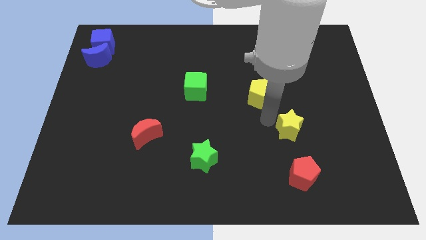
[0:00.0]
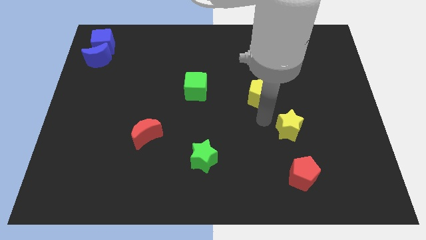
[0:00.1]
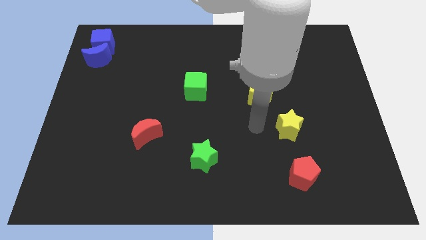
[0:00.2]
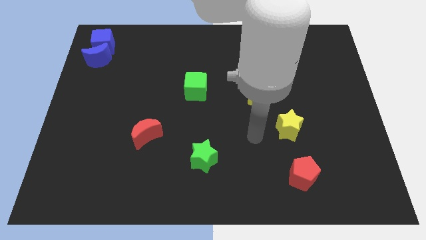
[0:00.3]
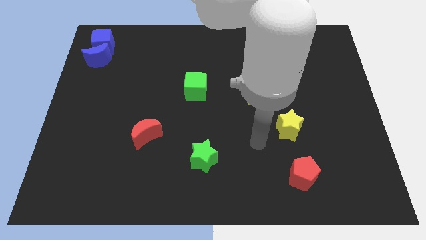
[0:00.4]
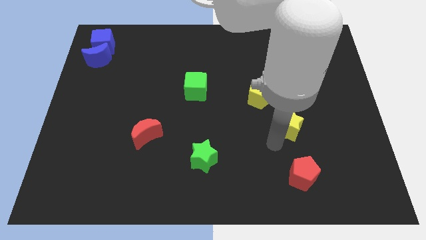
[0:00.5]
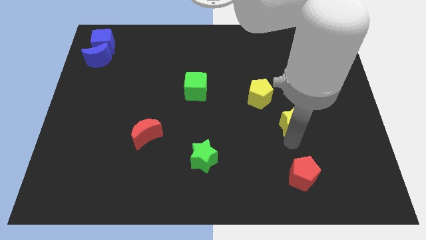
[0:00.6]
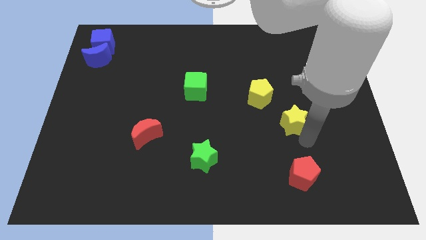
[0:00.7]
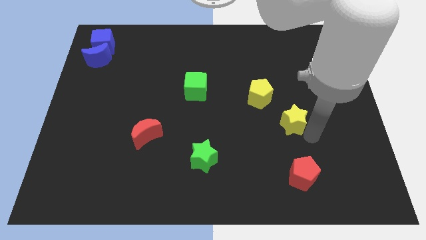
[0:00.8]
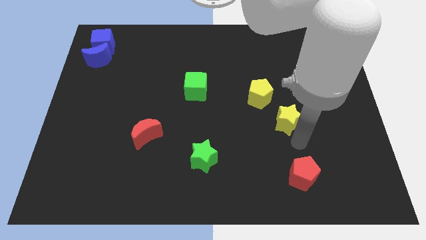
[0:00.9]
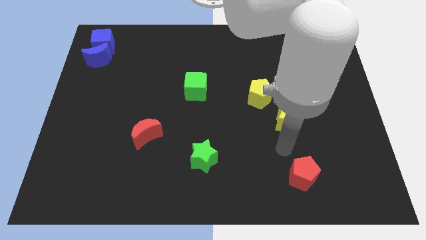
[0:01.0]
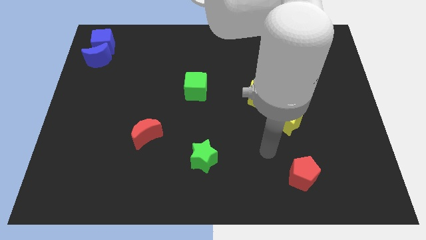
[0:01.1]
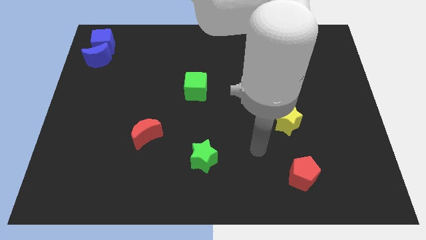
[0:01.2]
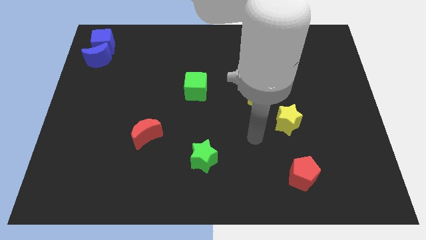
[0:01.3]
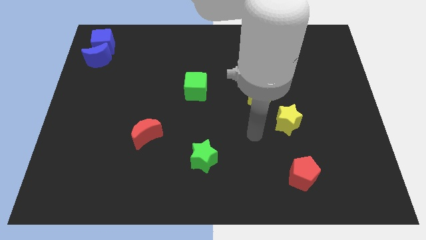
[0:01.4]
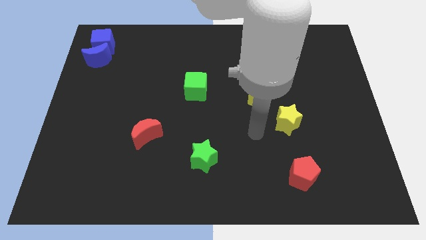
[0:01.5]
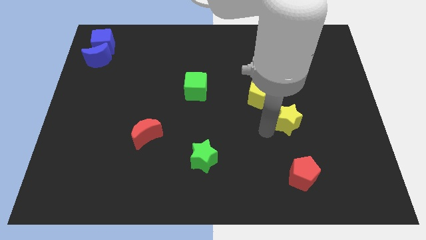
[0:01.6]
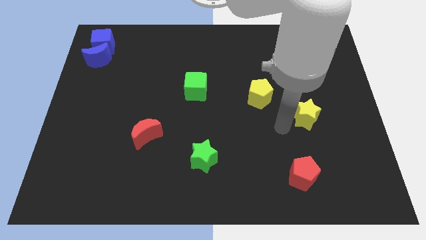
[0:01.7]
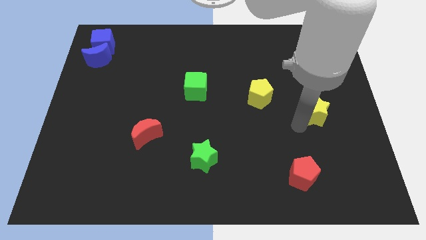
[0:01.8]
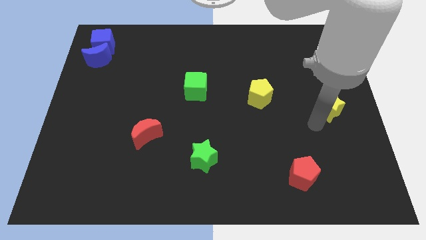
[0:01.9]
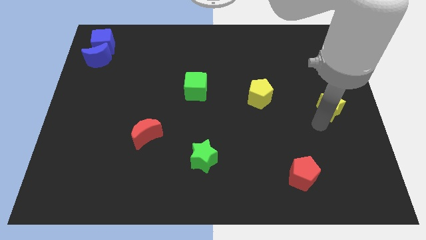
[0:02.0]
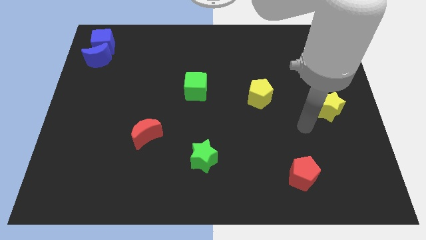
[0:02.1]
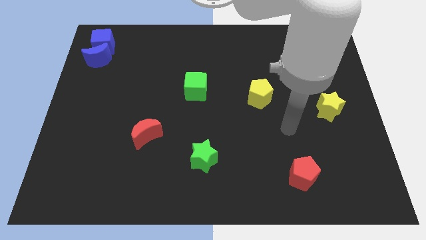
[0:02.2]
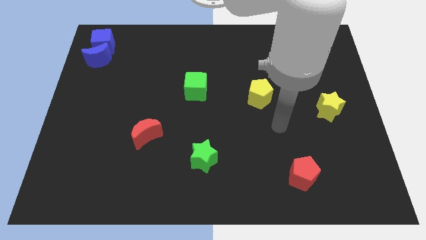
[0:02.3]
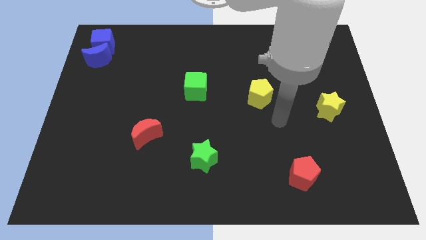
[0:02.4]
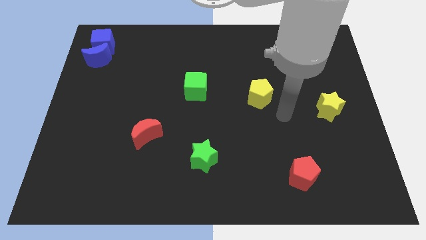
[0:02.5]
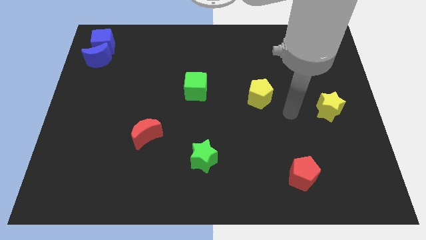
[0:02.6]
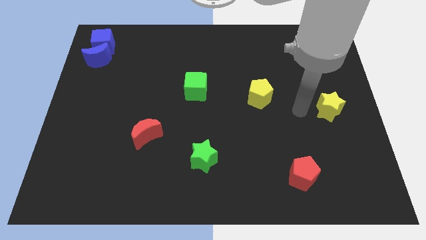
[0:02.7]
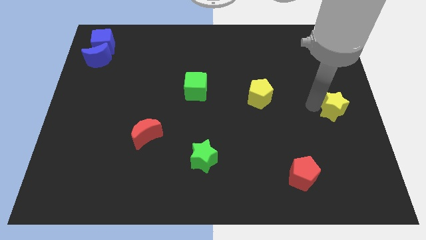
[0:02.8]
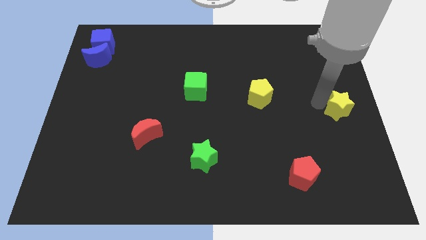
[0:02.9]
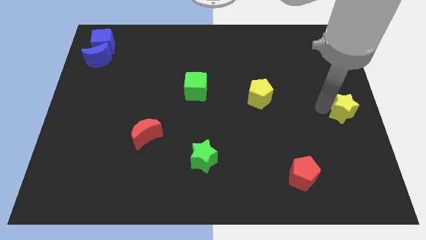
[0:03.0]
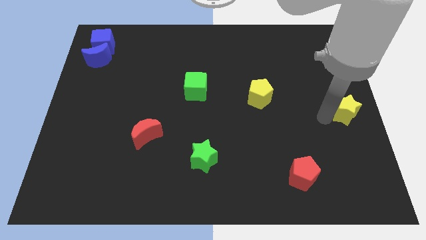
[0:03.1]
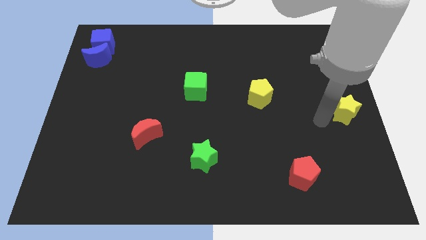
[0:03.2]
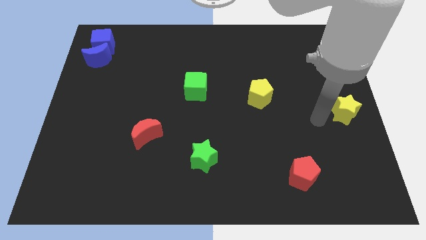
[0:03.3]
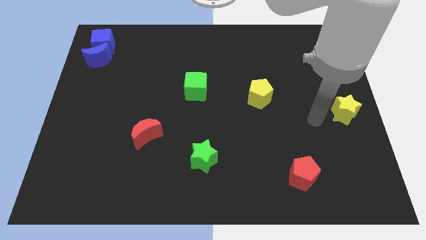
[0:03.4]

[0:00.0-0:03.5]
place the yellow star at the right center

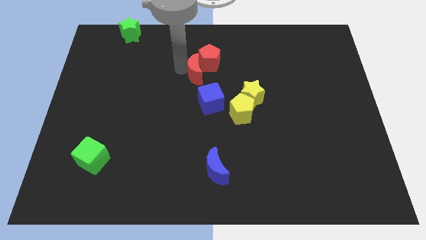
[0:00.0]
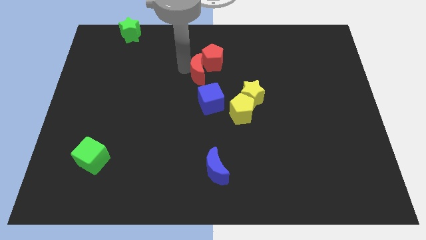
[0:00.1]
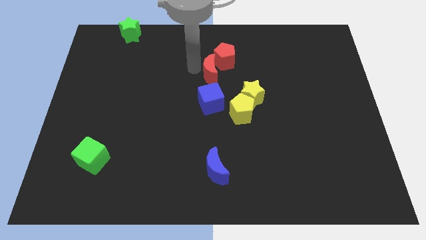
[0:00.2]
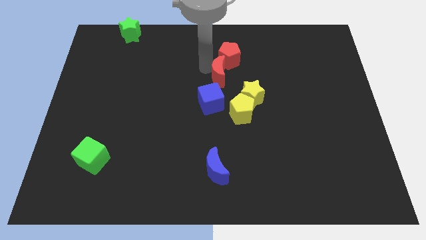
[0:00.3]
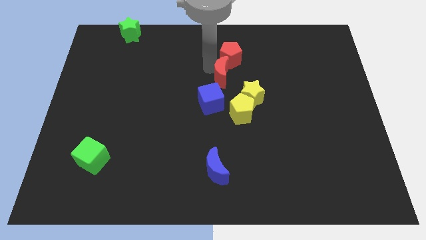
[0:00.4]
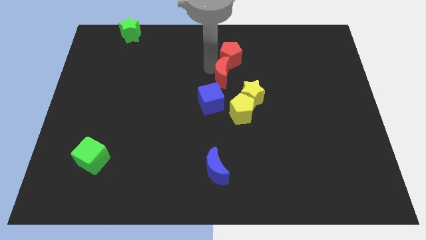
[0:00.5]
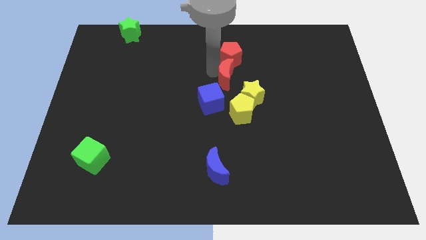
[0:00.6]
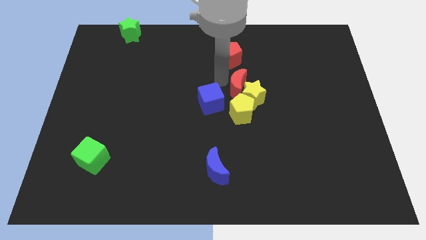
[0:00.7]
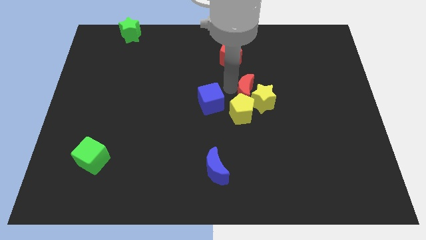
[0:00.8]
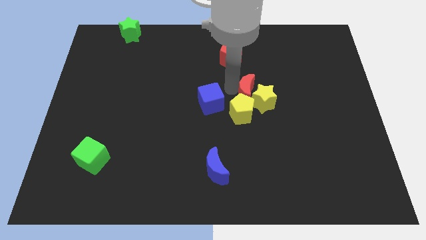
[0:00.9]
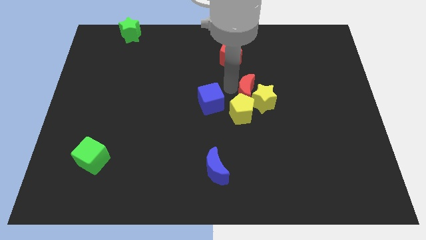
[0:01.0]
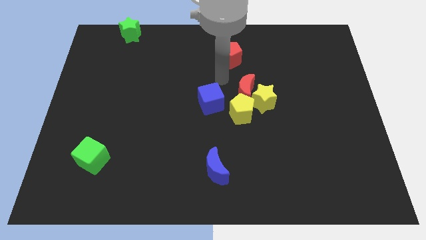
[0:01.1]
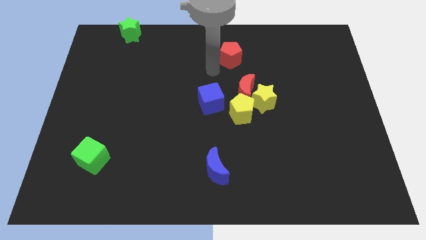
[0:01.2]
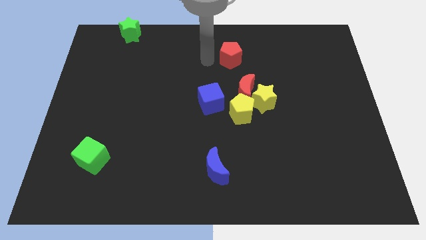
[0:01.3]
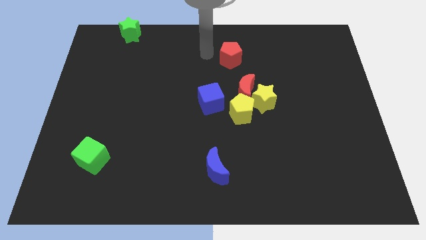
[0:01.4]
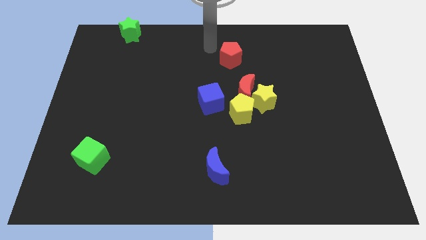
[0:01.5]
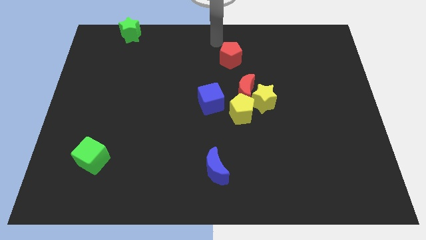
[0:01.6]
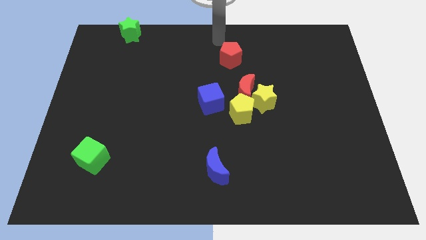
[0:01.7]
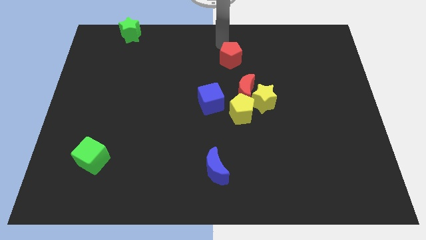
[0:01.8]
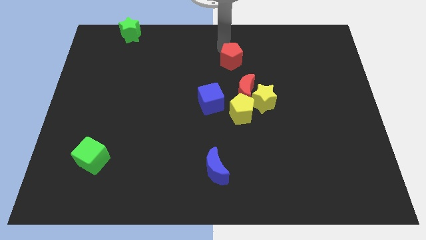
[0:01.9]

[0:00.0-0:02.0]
push the red moon close to yellow star

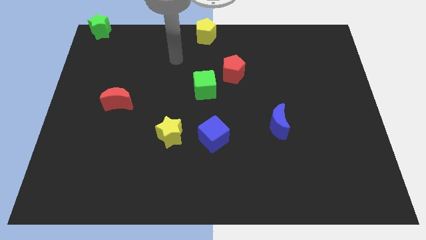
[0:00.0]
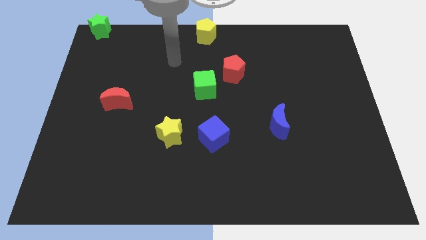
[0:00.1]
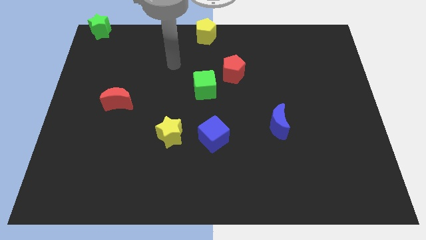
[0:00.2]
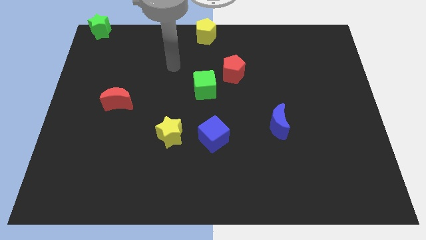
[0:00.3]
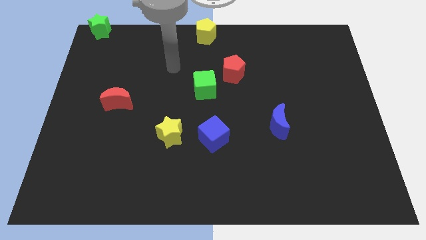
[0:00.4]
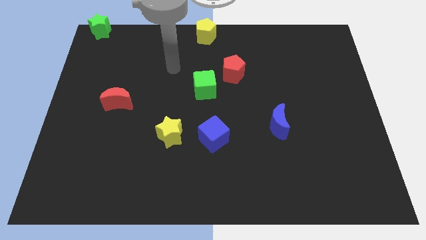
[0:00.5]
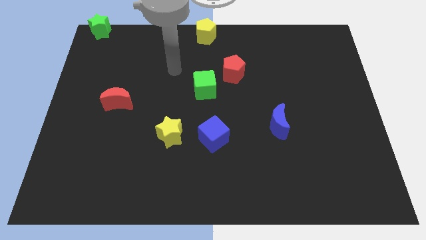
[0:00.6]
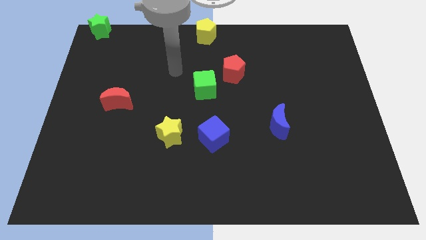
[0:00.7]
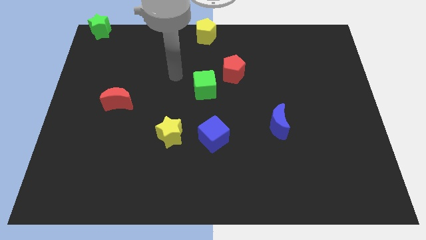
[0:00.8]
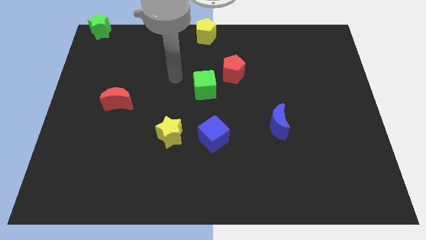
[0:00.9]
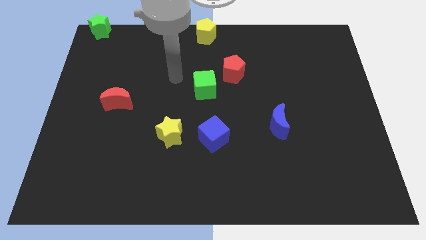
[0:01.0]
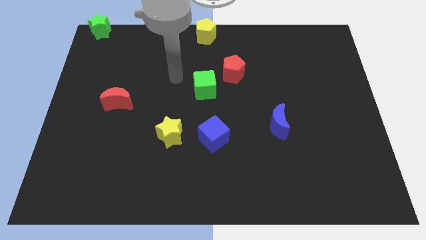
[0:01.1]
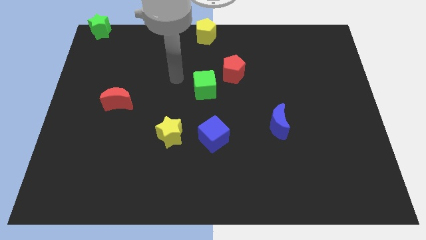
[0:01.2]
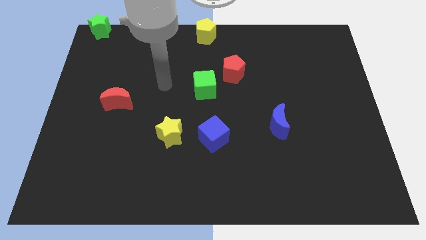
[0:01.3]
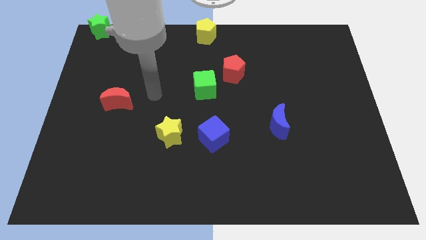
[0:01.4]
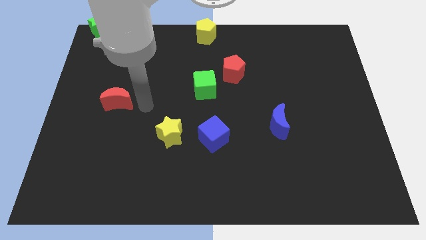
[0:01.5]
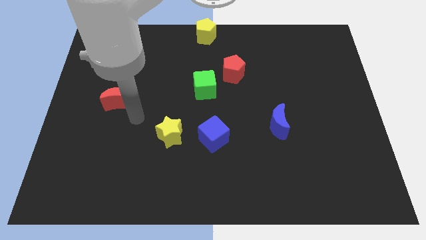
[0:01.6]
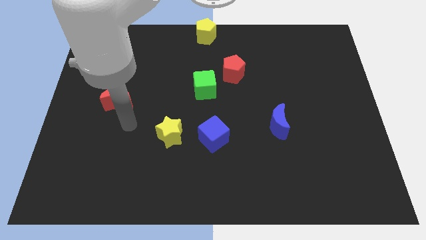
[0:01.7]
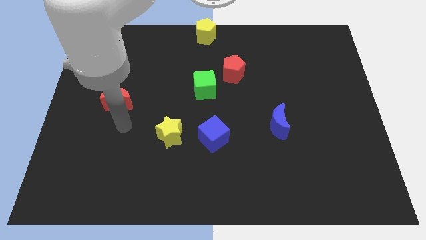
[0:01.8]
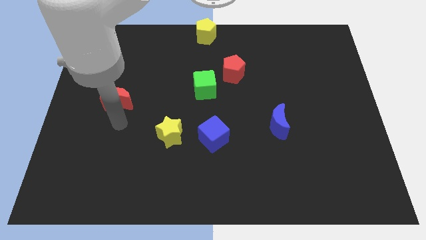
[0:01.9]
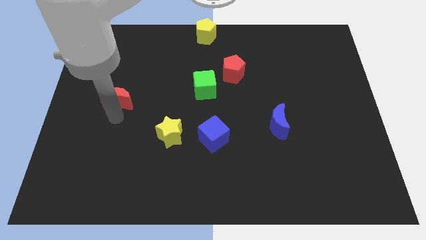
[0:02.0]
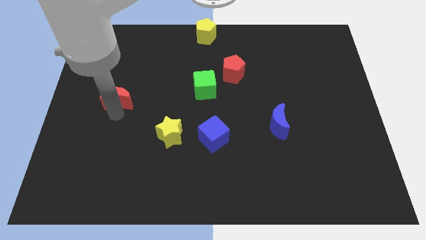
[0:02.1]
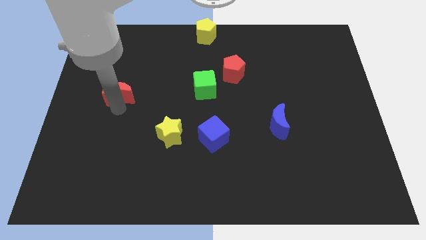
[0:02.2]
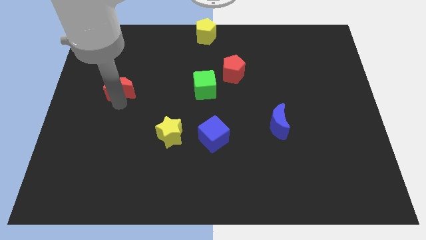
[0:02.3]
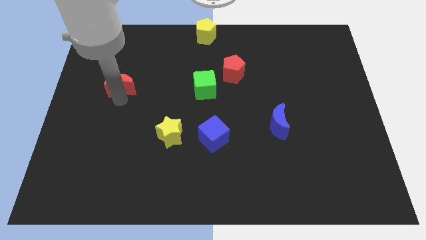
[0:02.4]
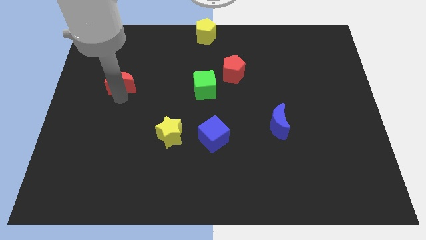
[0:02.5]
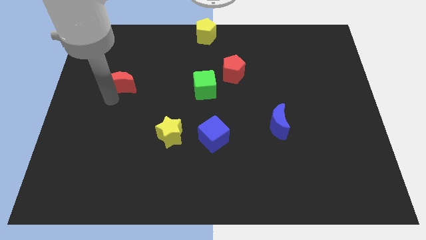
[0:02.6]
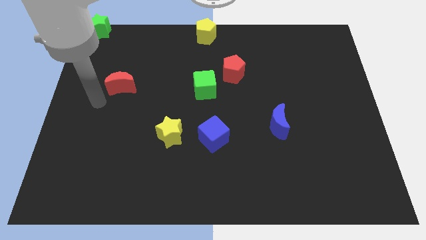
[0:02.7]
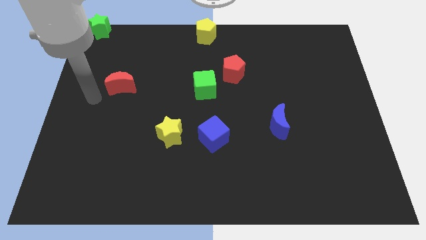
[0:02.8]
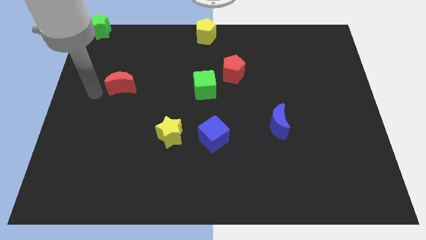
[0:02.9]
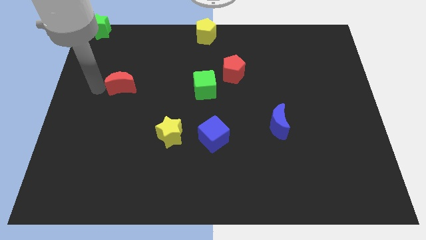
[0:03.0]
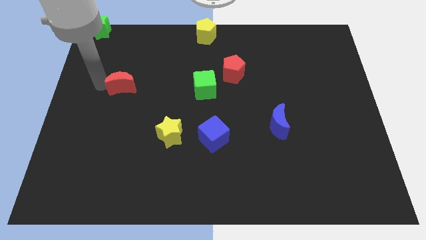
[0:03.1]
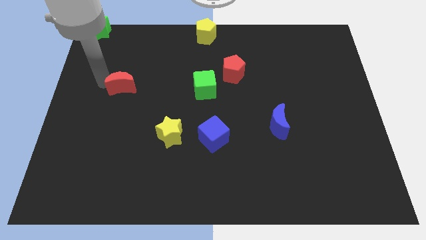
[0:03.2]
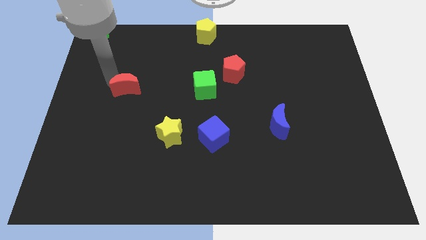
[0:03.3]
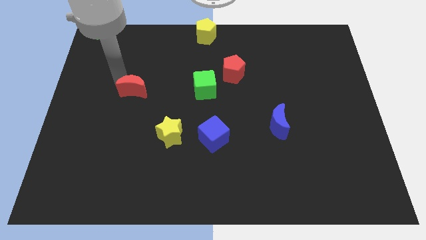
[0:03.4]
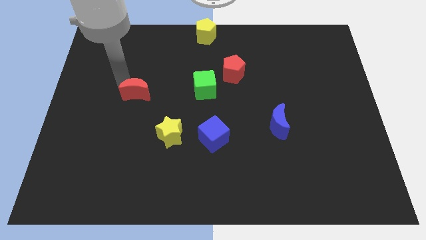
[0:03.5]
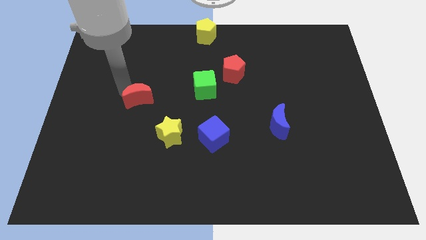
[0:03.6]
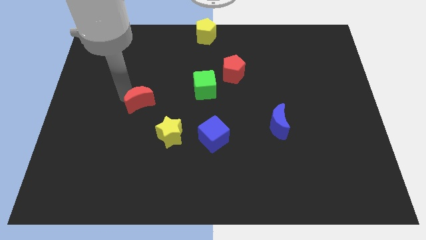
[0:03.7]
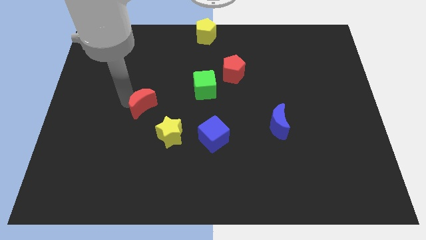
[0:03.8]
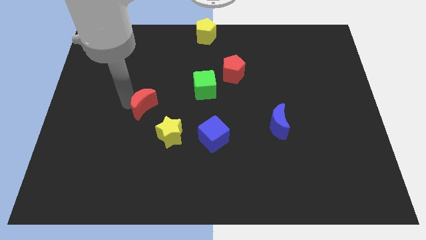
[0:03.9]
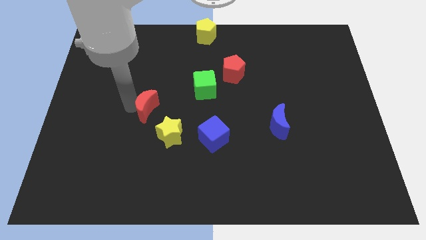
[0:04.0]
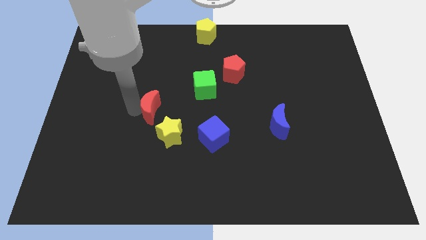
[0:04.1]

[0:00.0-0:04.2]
push the crescent around
